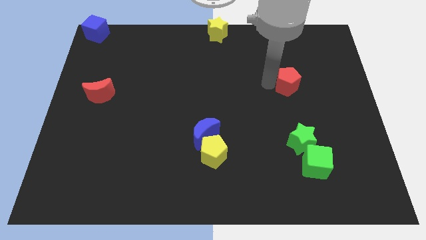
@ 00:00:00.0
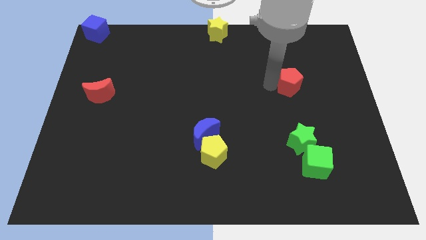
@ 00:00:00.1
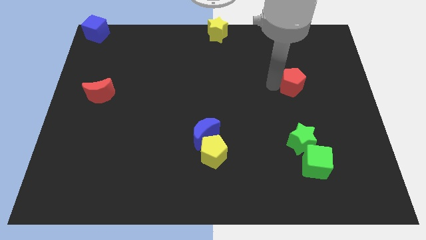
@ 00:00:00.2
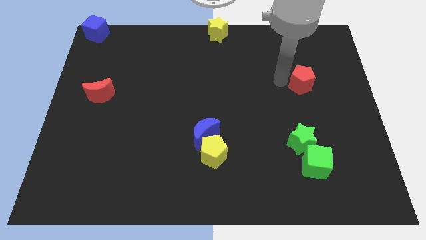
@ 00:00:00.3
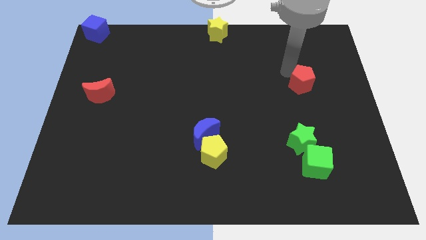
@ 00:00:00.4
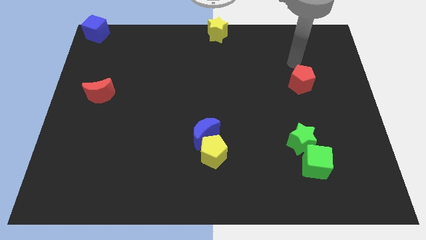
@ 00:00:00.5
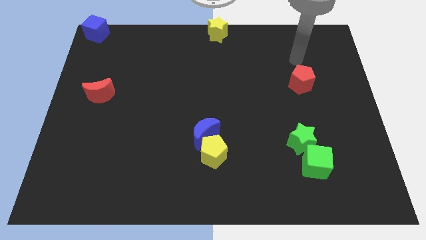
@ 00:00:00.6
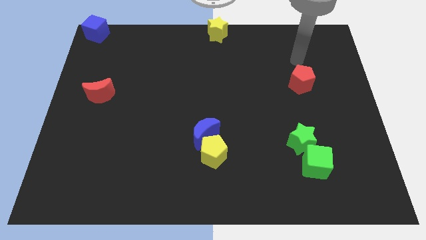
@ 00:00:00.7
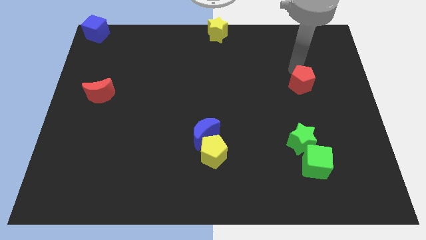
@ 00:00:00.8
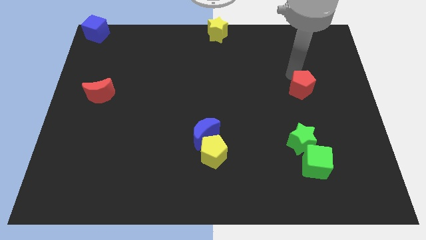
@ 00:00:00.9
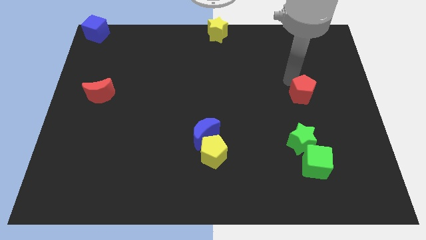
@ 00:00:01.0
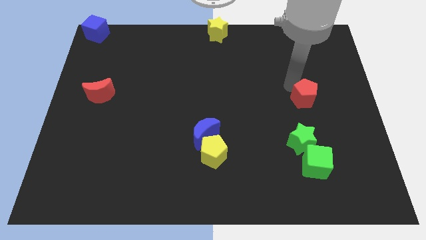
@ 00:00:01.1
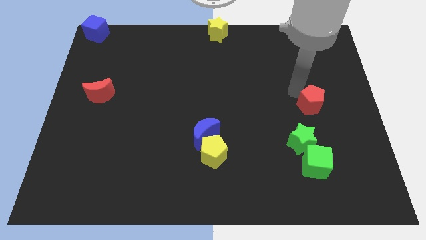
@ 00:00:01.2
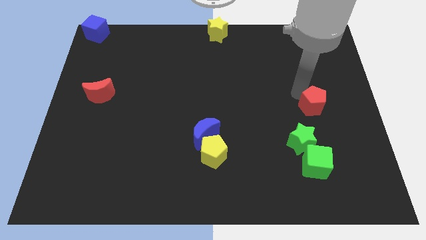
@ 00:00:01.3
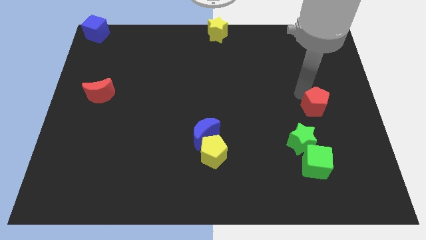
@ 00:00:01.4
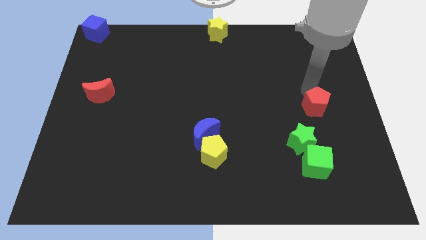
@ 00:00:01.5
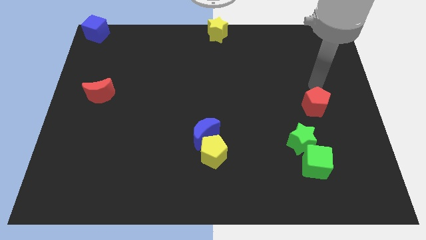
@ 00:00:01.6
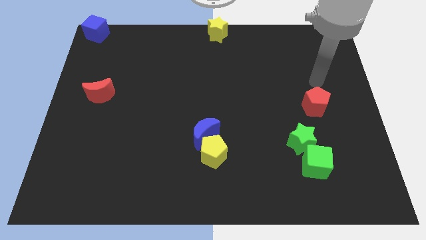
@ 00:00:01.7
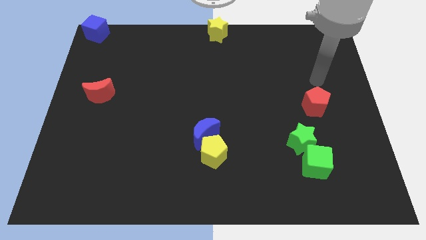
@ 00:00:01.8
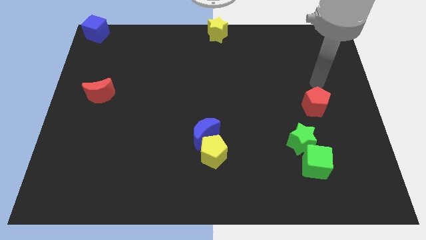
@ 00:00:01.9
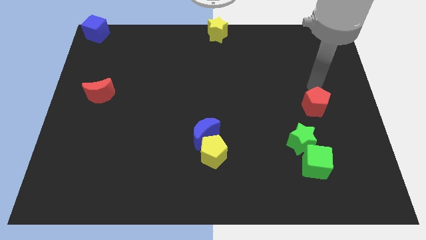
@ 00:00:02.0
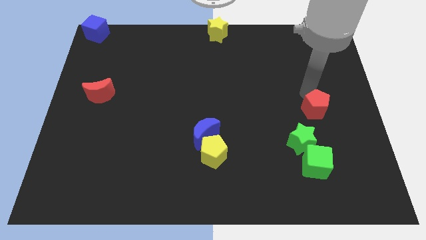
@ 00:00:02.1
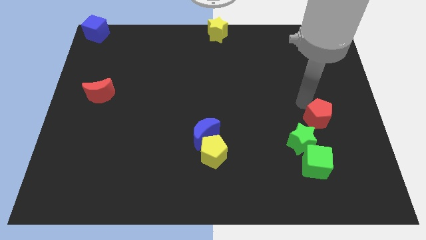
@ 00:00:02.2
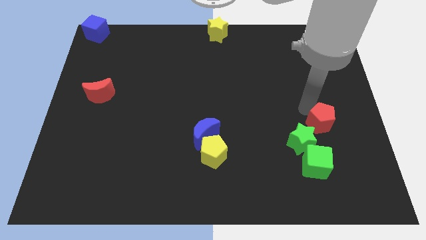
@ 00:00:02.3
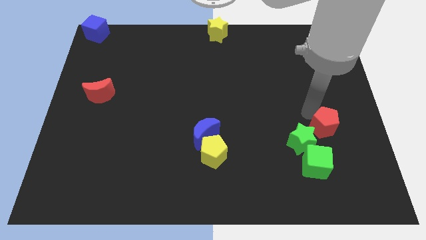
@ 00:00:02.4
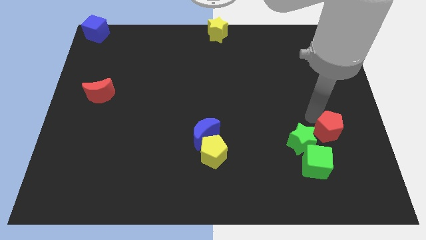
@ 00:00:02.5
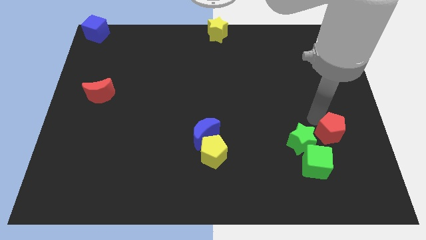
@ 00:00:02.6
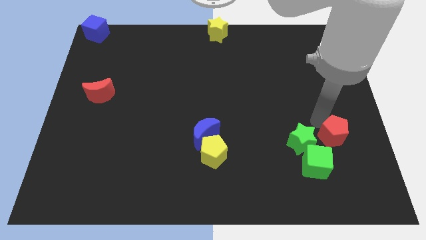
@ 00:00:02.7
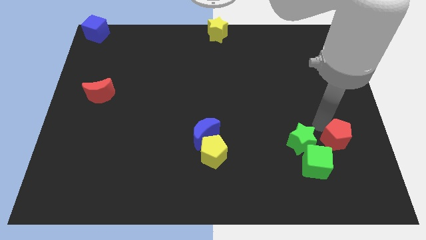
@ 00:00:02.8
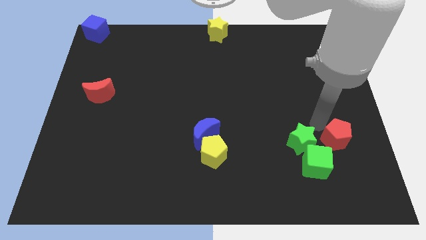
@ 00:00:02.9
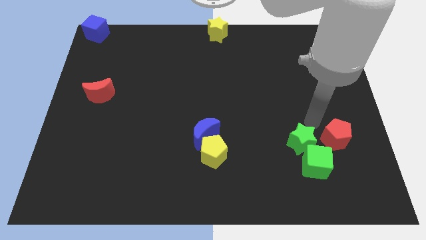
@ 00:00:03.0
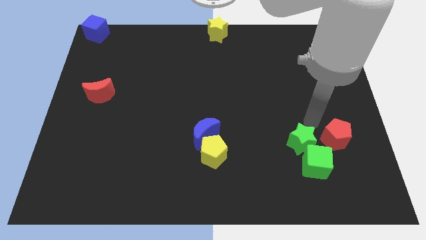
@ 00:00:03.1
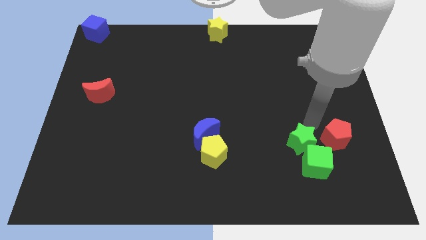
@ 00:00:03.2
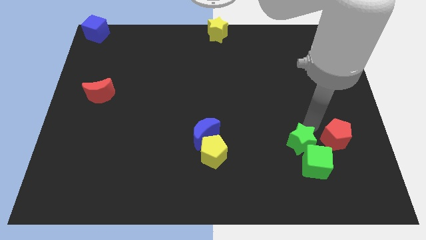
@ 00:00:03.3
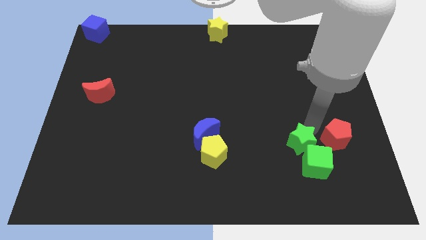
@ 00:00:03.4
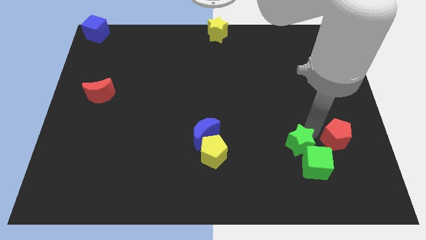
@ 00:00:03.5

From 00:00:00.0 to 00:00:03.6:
push the red pentagon to the right of the green star

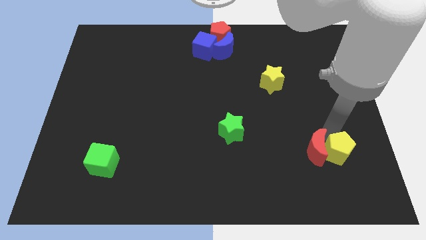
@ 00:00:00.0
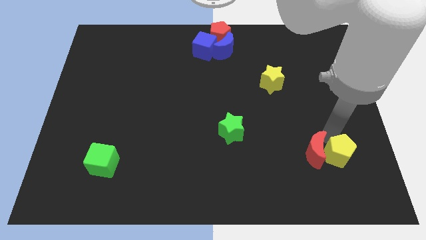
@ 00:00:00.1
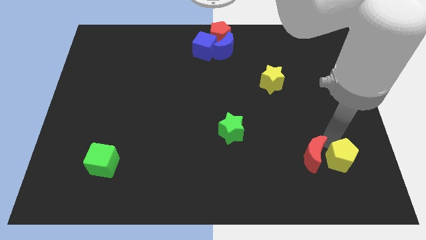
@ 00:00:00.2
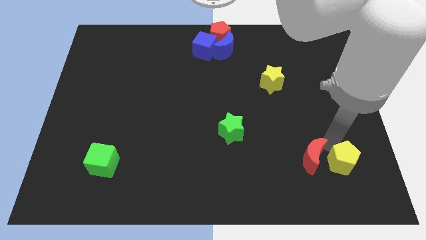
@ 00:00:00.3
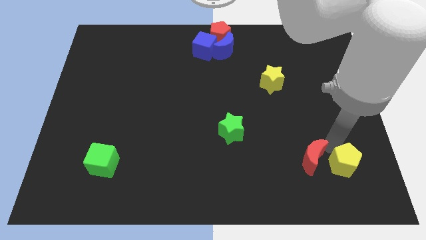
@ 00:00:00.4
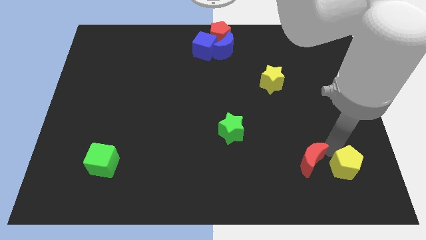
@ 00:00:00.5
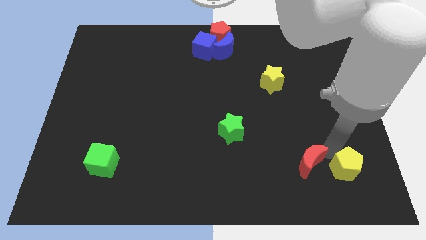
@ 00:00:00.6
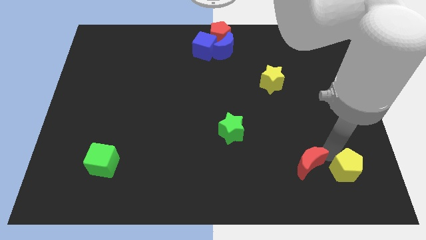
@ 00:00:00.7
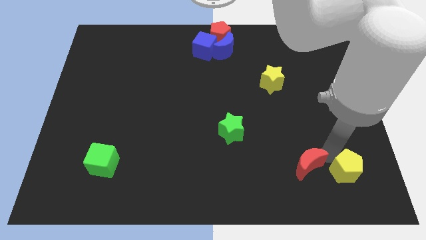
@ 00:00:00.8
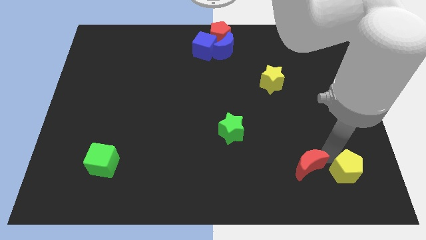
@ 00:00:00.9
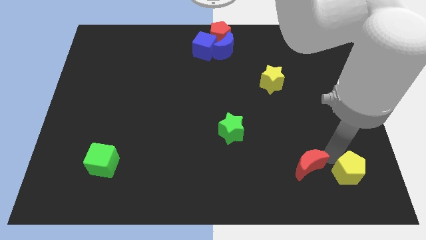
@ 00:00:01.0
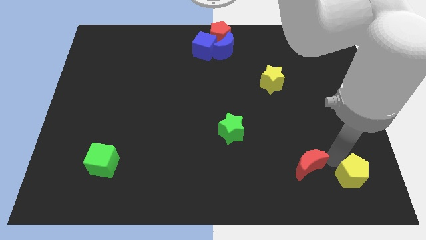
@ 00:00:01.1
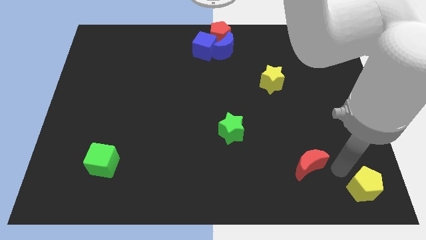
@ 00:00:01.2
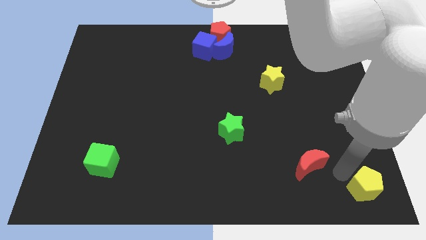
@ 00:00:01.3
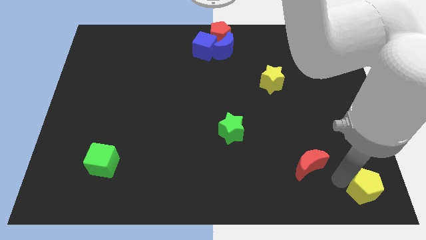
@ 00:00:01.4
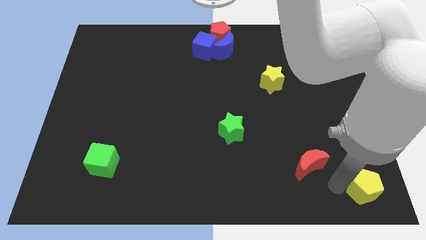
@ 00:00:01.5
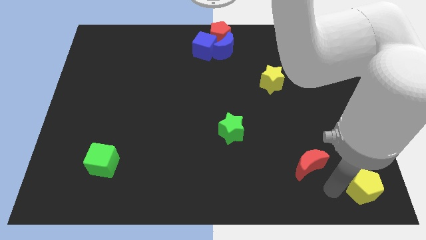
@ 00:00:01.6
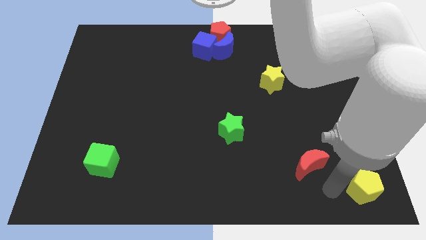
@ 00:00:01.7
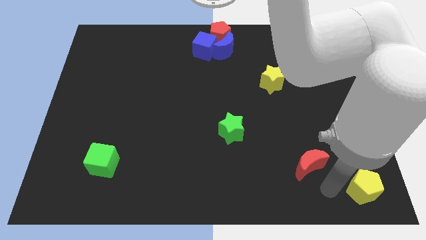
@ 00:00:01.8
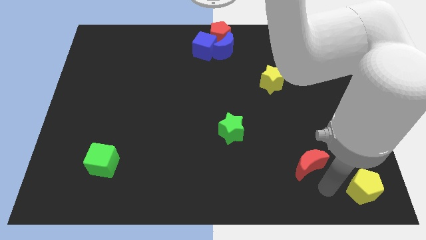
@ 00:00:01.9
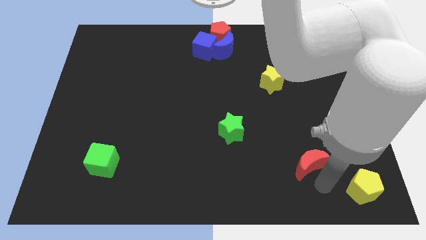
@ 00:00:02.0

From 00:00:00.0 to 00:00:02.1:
separate yellow pentagon from red moon

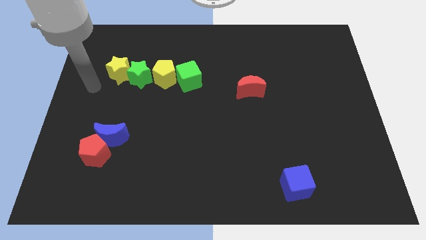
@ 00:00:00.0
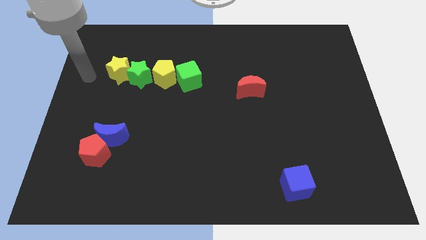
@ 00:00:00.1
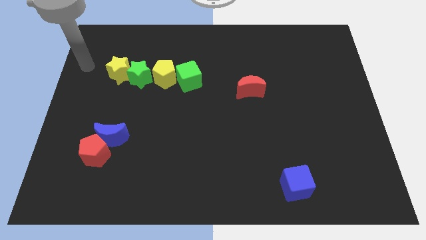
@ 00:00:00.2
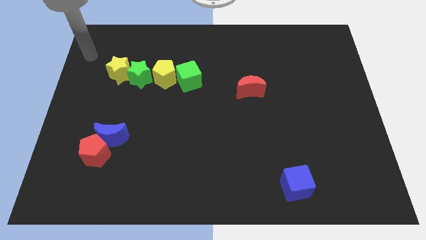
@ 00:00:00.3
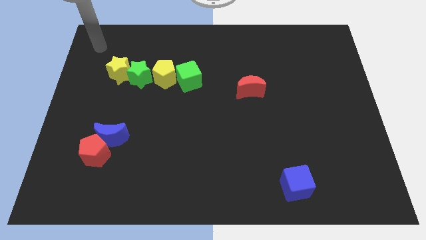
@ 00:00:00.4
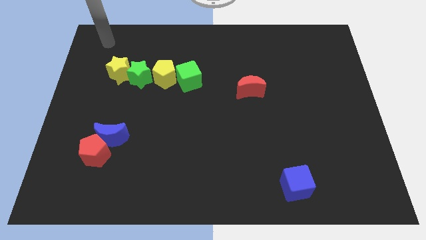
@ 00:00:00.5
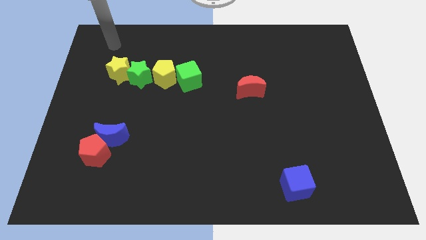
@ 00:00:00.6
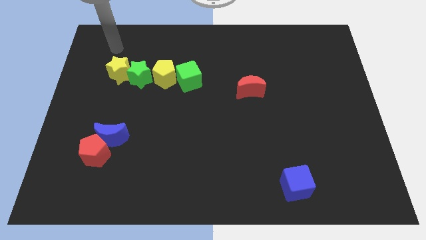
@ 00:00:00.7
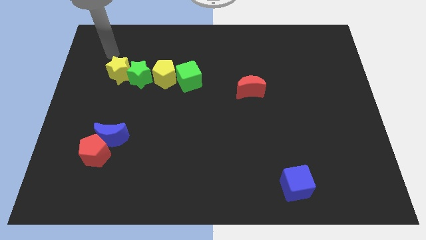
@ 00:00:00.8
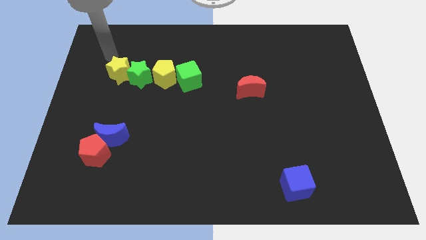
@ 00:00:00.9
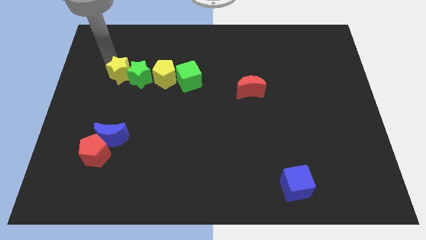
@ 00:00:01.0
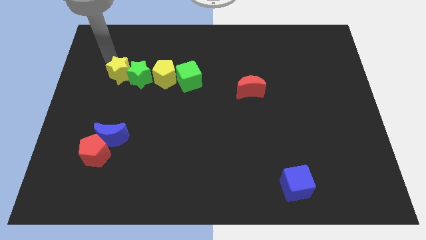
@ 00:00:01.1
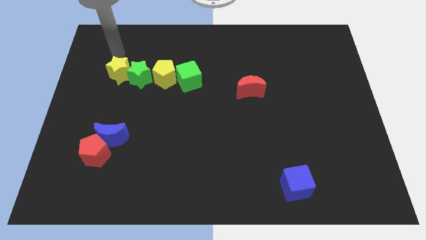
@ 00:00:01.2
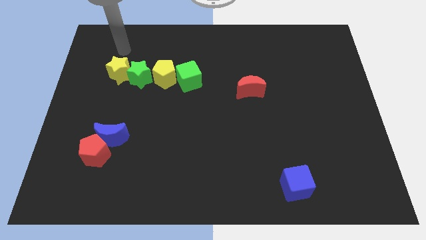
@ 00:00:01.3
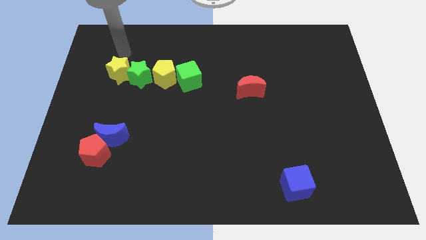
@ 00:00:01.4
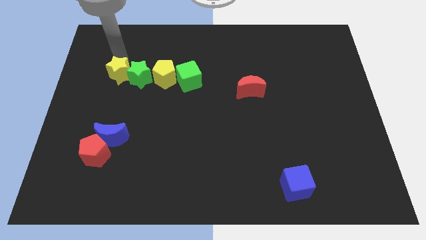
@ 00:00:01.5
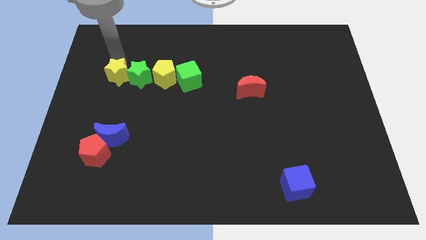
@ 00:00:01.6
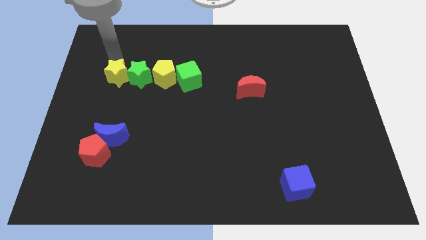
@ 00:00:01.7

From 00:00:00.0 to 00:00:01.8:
move your arm to the top of the yellow star

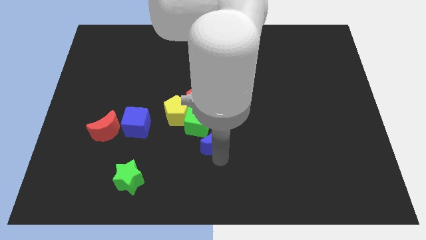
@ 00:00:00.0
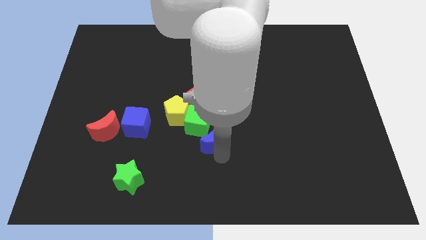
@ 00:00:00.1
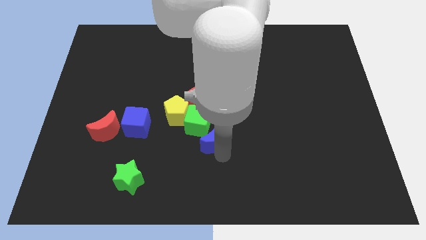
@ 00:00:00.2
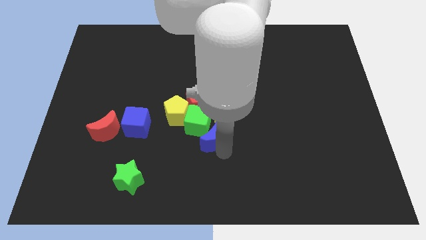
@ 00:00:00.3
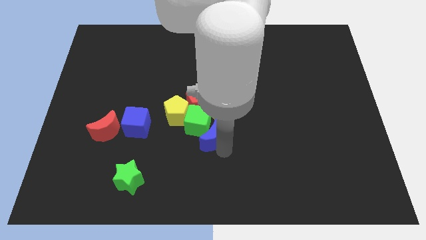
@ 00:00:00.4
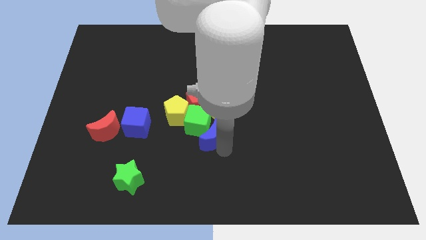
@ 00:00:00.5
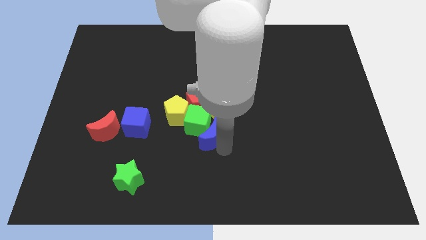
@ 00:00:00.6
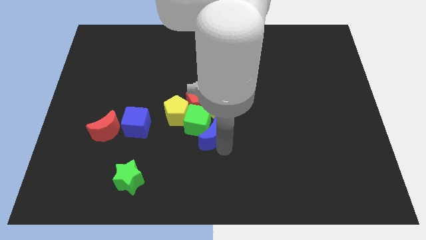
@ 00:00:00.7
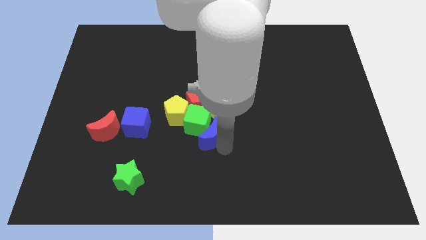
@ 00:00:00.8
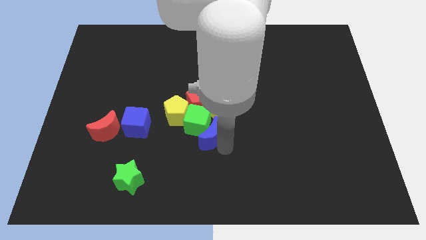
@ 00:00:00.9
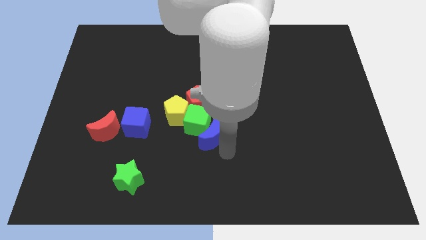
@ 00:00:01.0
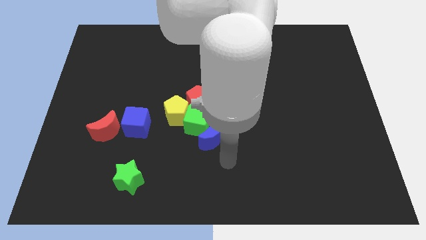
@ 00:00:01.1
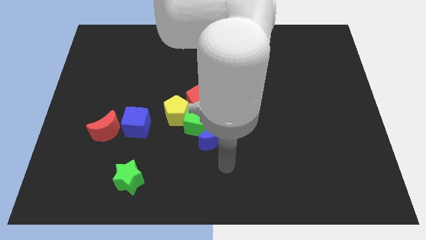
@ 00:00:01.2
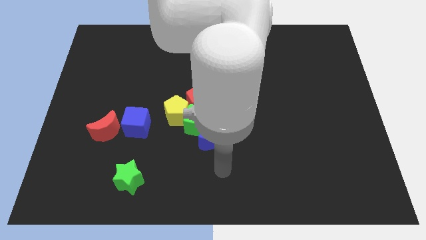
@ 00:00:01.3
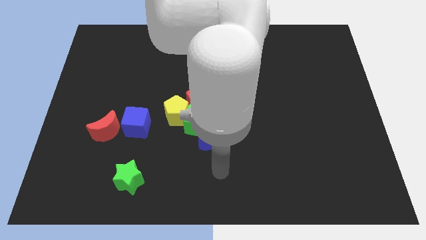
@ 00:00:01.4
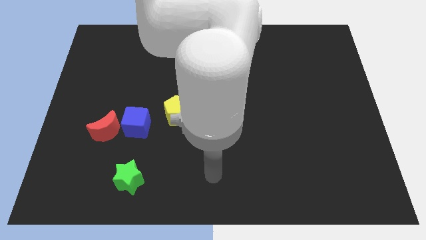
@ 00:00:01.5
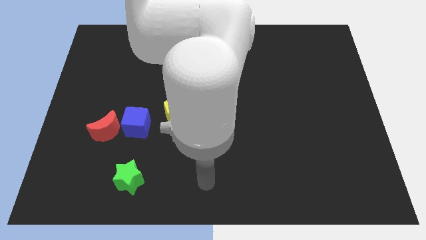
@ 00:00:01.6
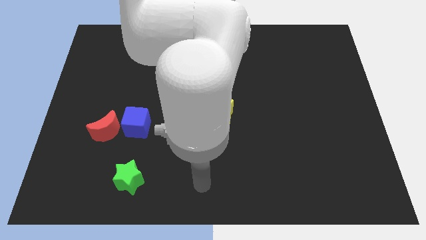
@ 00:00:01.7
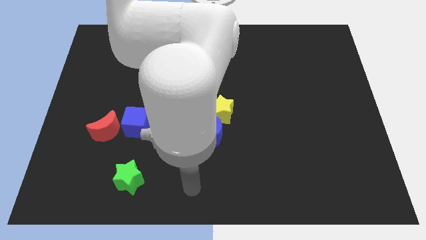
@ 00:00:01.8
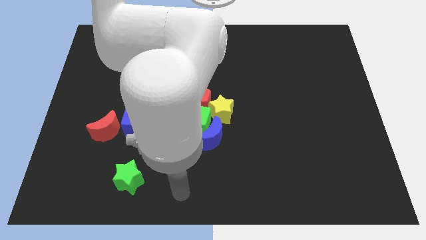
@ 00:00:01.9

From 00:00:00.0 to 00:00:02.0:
move your arm towards the green star
